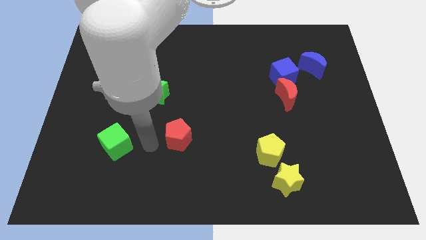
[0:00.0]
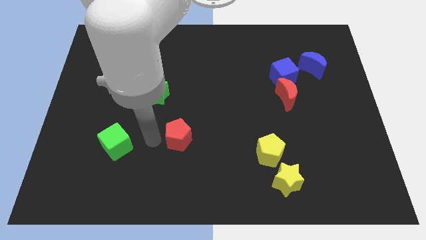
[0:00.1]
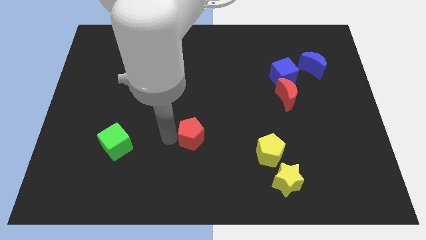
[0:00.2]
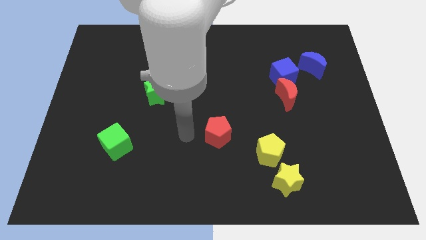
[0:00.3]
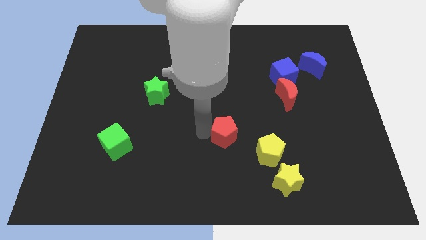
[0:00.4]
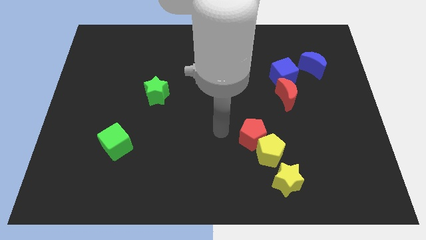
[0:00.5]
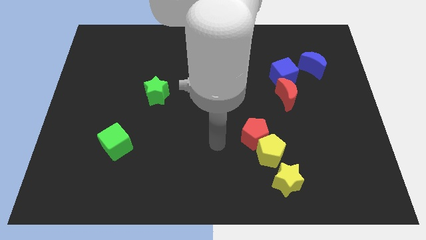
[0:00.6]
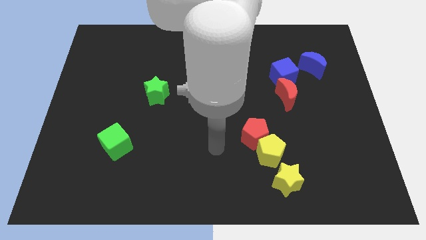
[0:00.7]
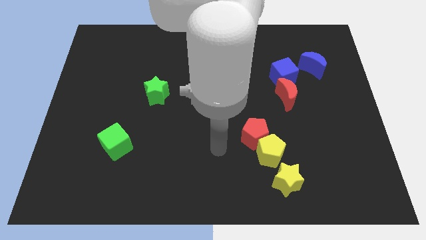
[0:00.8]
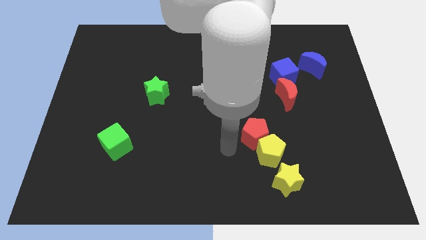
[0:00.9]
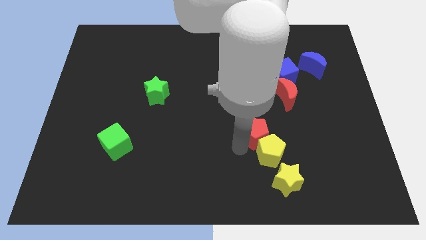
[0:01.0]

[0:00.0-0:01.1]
move the red pentagon into the yellow pentagon

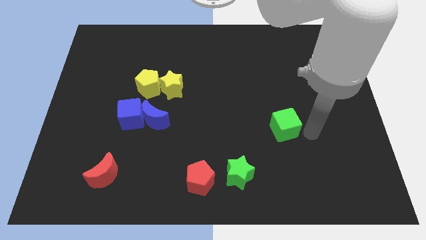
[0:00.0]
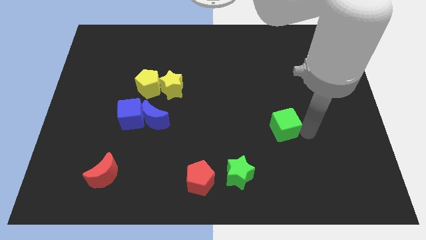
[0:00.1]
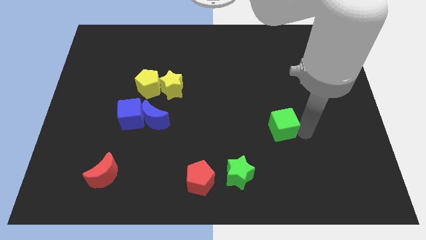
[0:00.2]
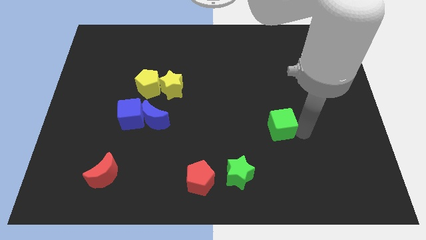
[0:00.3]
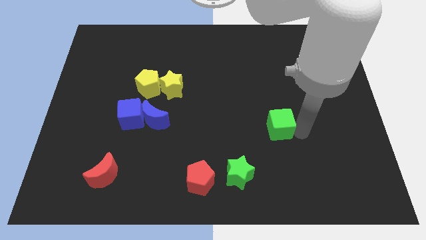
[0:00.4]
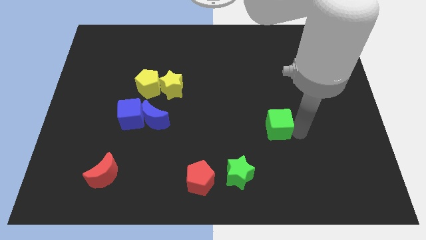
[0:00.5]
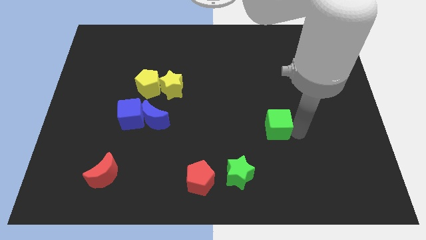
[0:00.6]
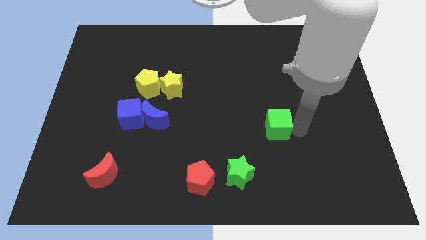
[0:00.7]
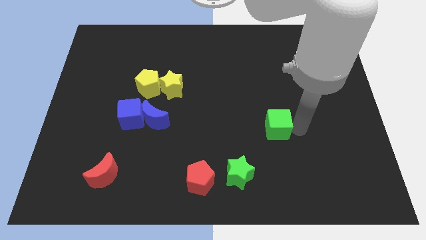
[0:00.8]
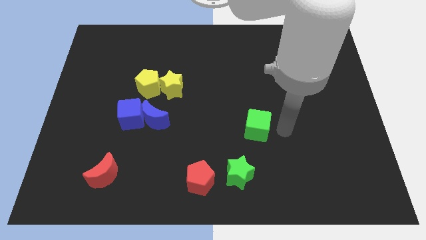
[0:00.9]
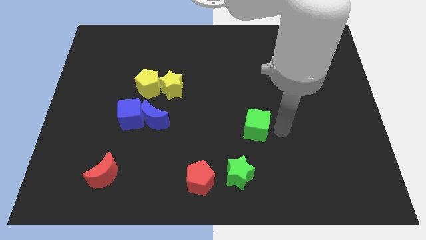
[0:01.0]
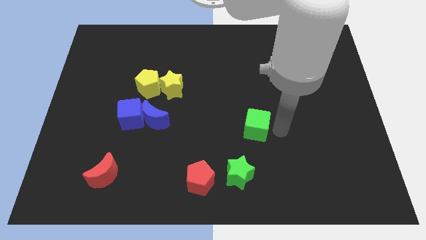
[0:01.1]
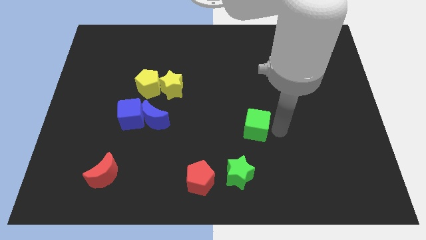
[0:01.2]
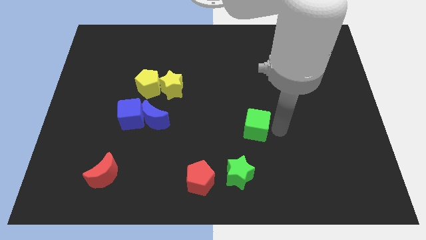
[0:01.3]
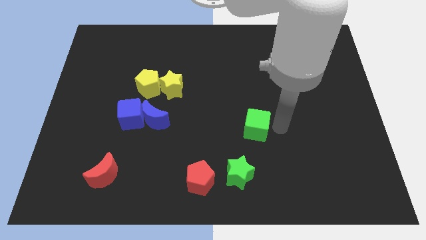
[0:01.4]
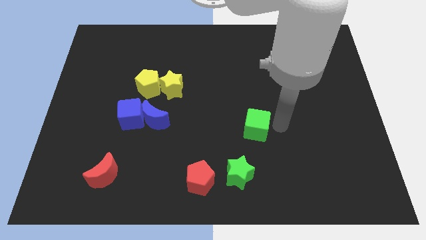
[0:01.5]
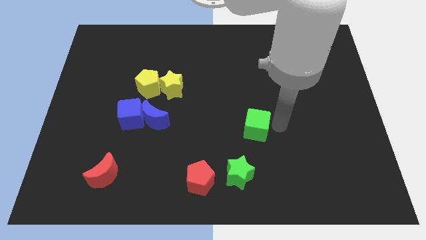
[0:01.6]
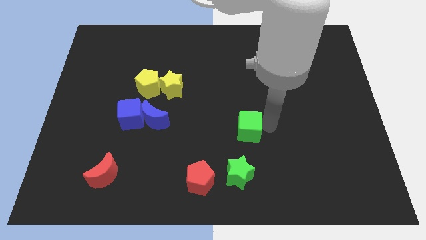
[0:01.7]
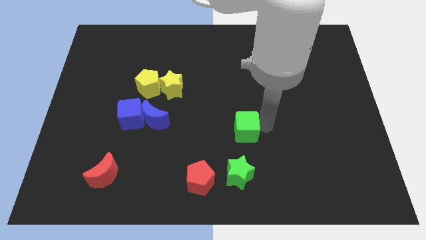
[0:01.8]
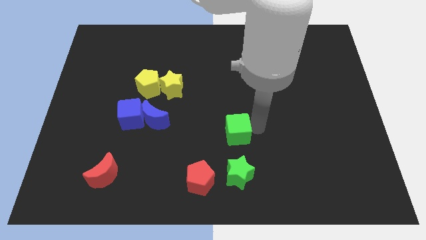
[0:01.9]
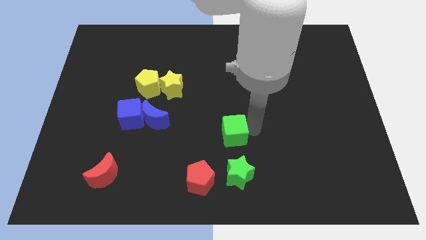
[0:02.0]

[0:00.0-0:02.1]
slide the green cube slightly to the left

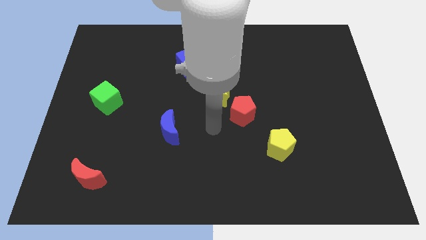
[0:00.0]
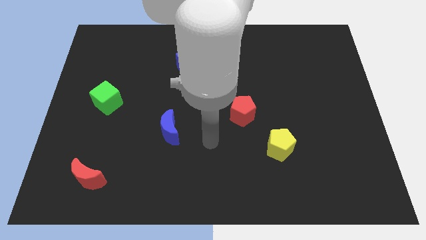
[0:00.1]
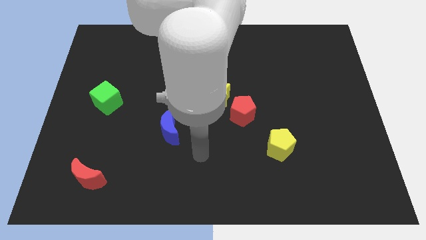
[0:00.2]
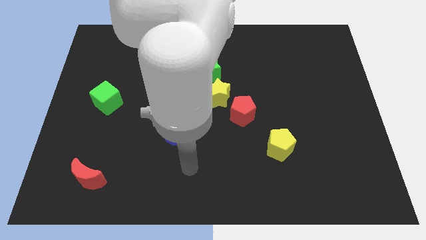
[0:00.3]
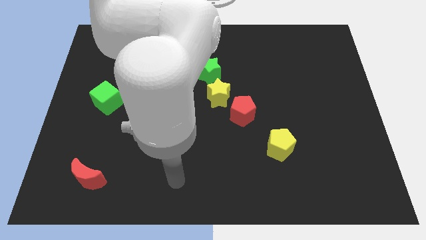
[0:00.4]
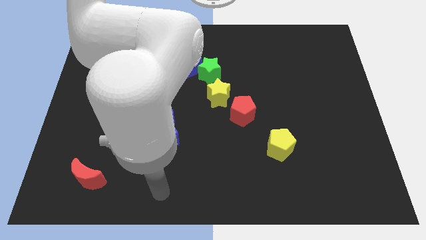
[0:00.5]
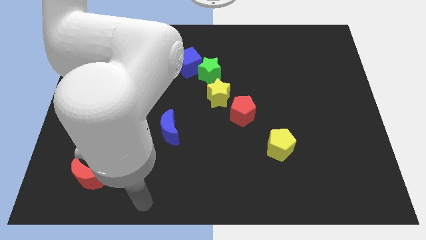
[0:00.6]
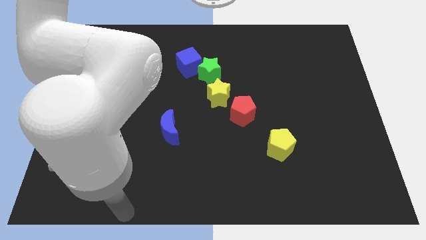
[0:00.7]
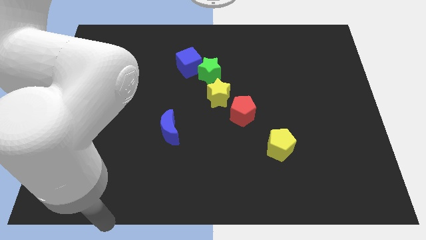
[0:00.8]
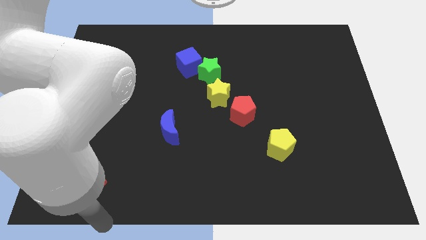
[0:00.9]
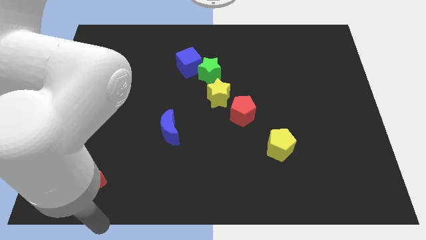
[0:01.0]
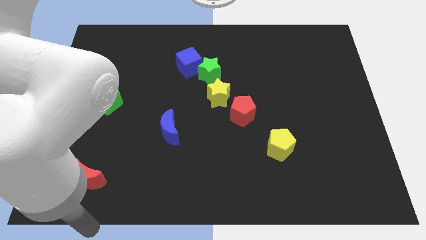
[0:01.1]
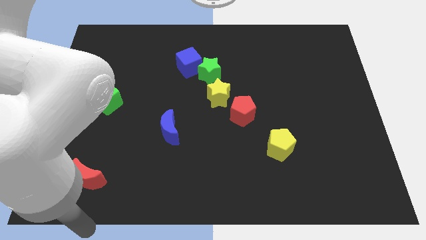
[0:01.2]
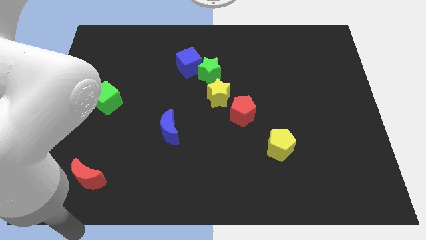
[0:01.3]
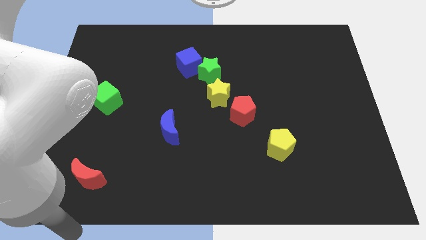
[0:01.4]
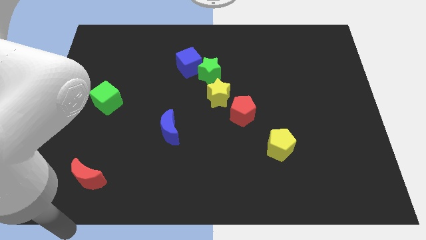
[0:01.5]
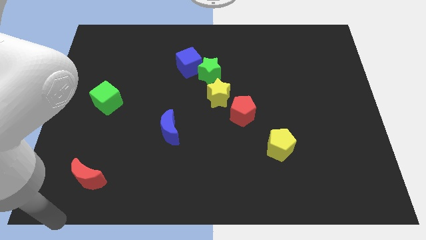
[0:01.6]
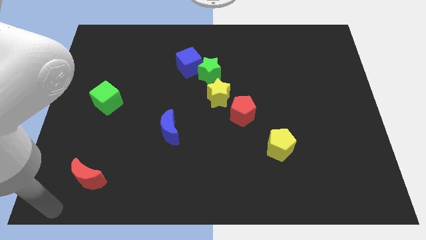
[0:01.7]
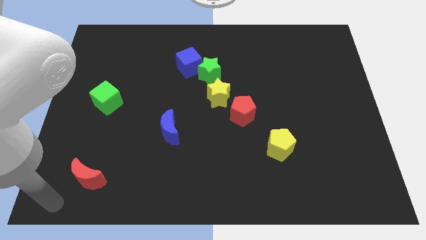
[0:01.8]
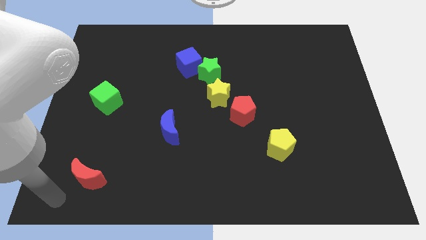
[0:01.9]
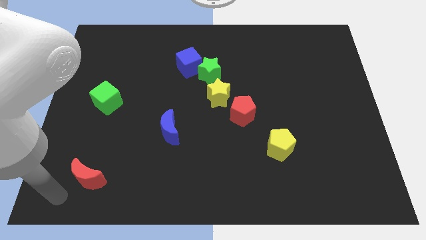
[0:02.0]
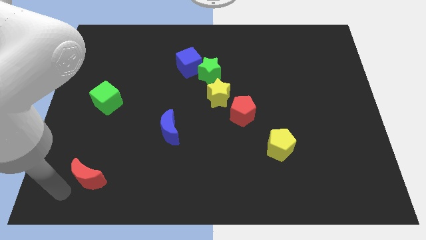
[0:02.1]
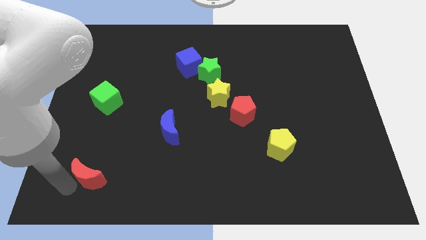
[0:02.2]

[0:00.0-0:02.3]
point your arm at the left of the red crescent

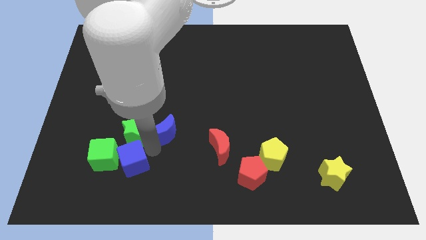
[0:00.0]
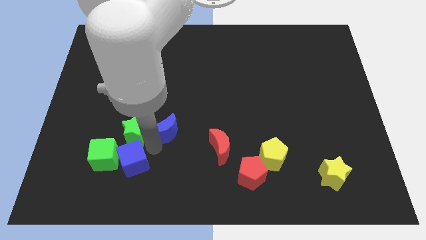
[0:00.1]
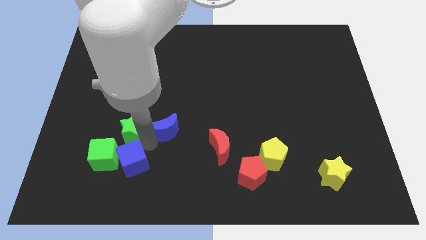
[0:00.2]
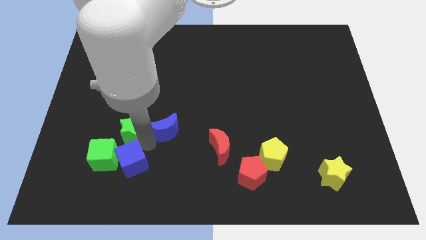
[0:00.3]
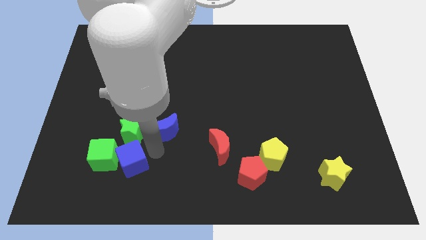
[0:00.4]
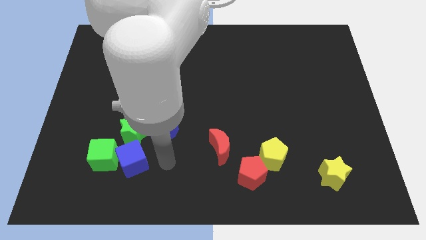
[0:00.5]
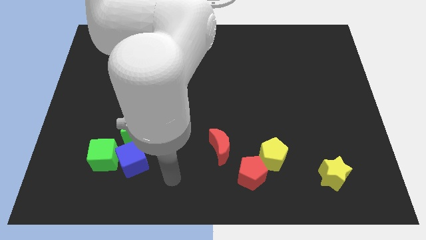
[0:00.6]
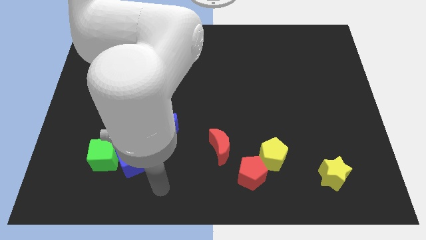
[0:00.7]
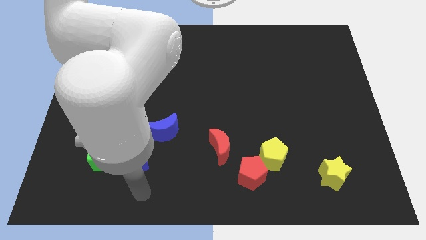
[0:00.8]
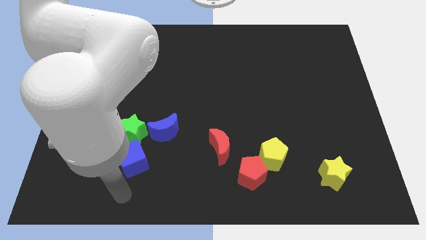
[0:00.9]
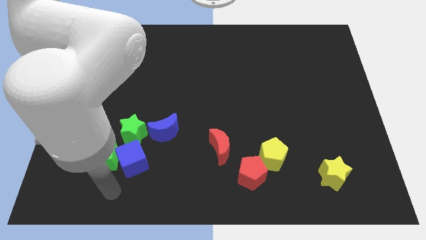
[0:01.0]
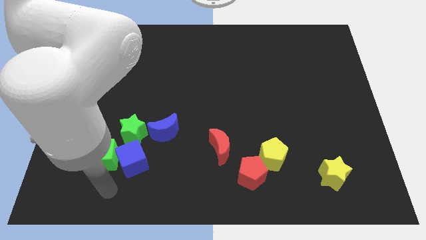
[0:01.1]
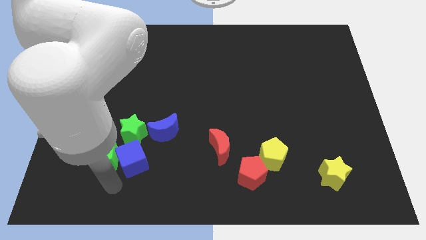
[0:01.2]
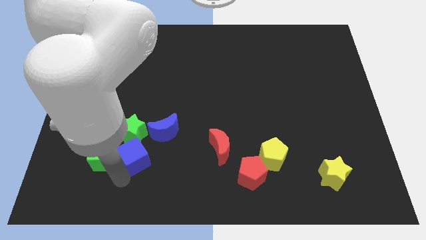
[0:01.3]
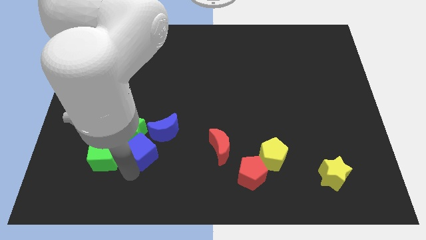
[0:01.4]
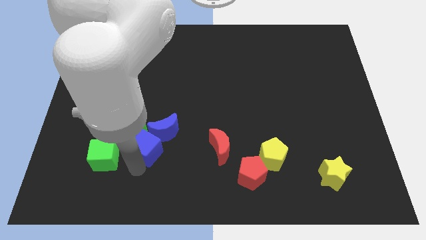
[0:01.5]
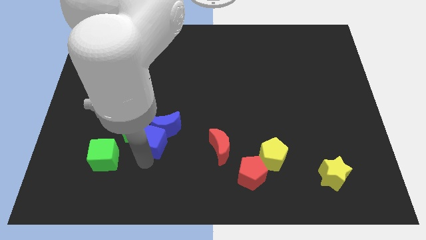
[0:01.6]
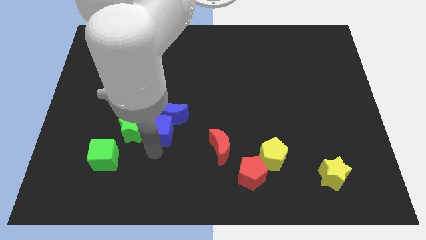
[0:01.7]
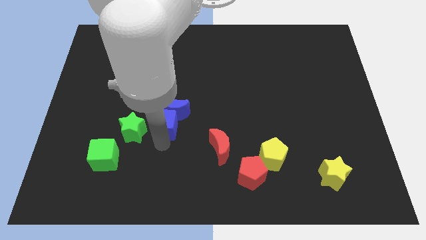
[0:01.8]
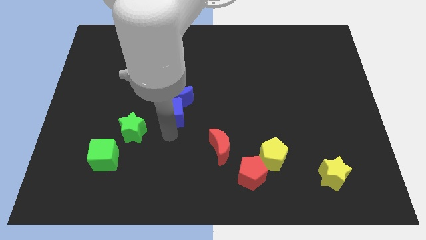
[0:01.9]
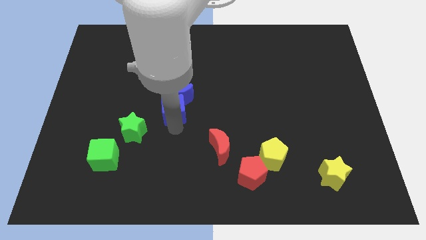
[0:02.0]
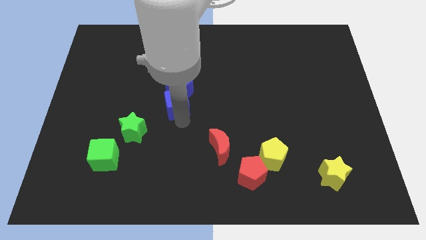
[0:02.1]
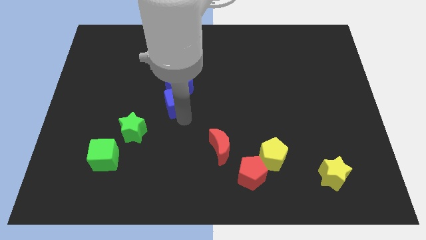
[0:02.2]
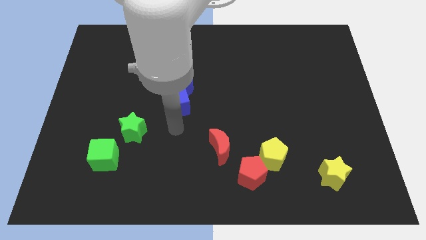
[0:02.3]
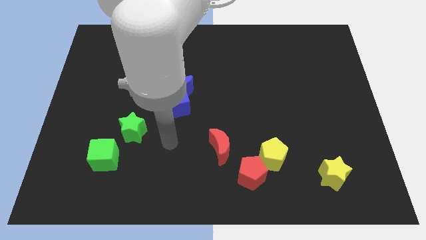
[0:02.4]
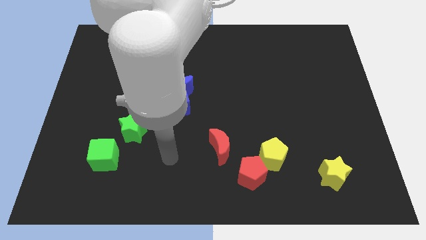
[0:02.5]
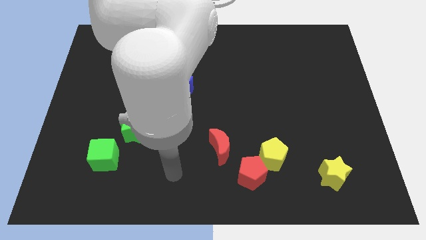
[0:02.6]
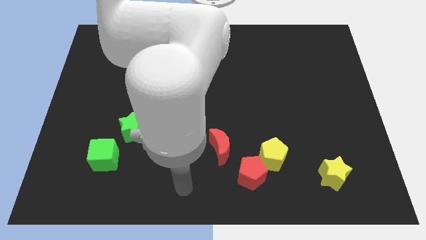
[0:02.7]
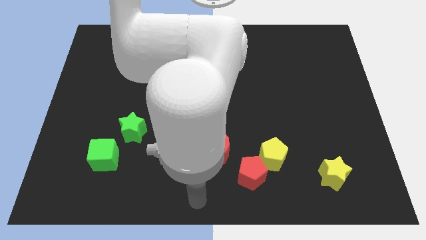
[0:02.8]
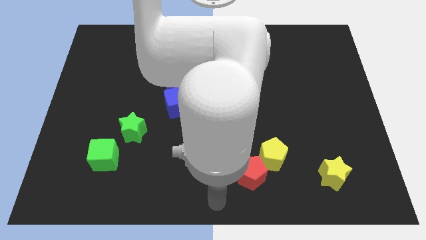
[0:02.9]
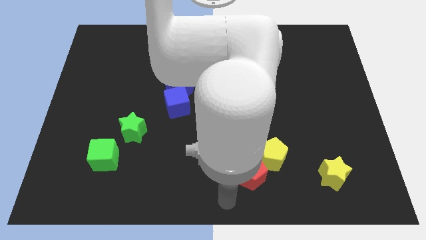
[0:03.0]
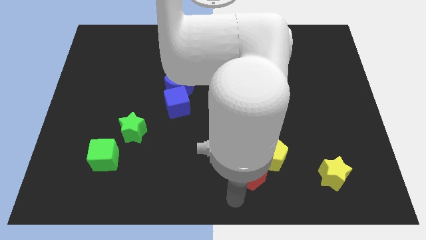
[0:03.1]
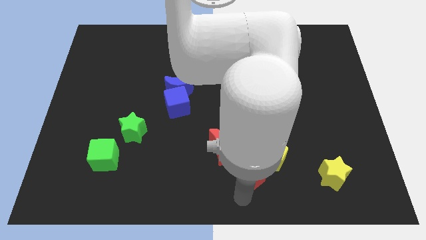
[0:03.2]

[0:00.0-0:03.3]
move the blue cube and blue crescent away from the green cube and green star

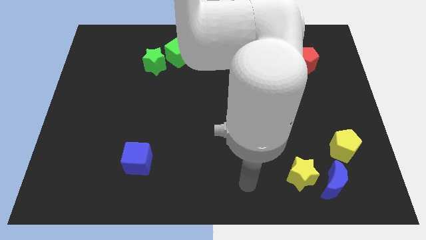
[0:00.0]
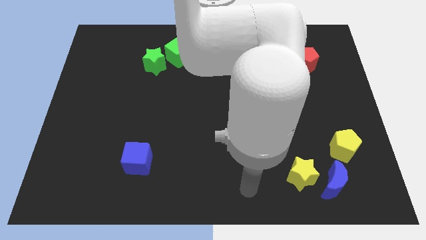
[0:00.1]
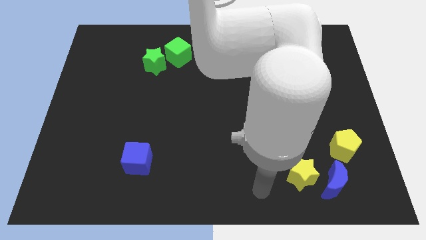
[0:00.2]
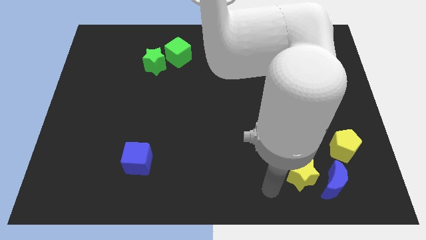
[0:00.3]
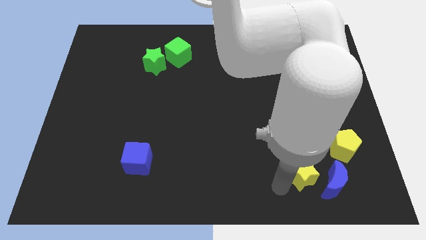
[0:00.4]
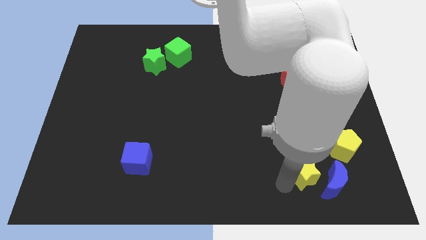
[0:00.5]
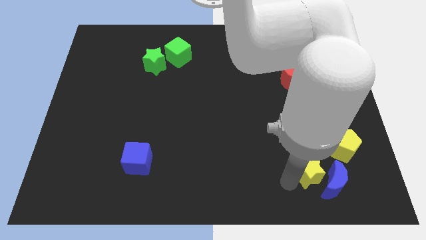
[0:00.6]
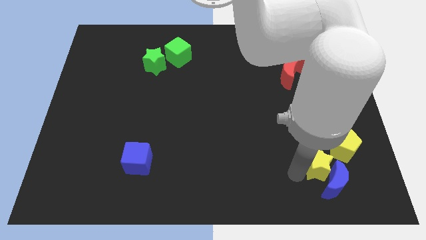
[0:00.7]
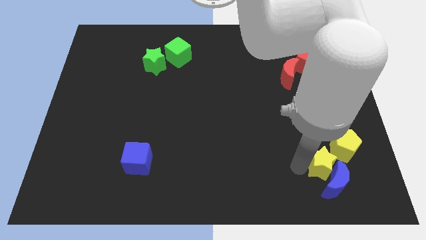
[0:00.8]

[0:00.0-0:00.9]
move the yellow star close to the yellow pentagon
